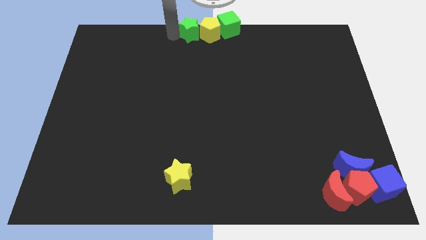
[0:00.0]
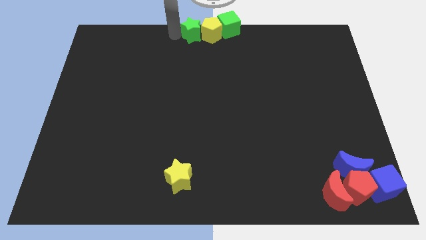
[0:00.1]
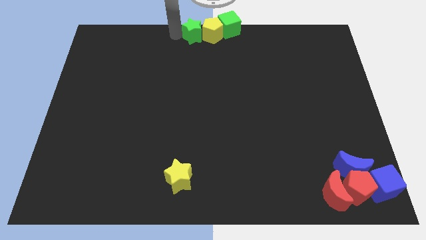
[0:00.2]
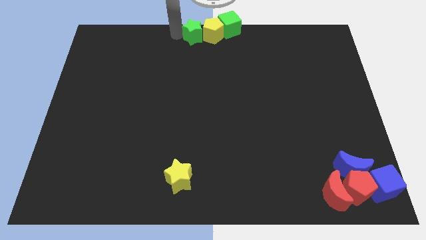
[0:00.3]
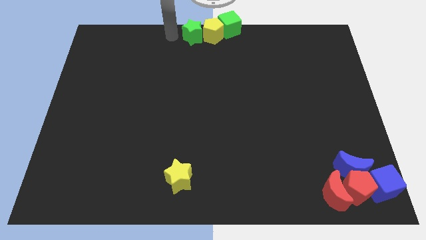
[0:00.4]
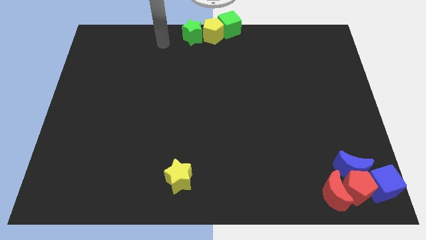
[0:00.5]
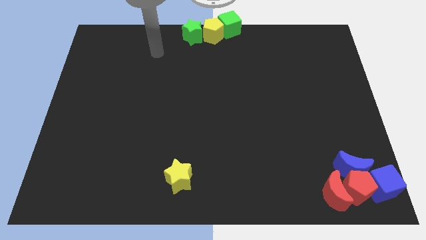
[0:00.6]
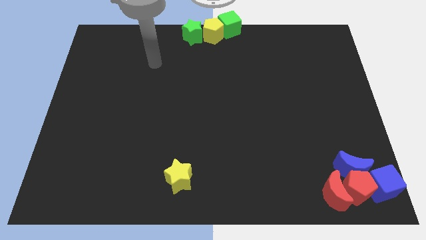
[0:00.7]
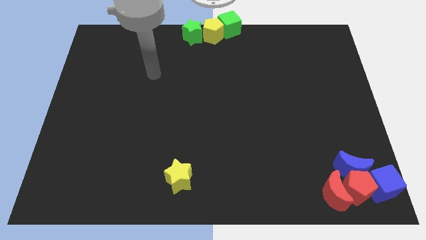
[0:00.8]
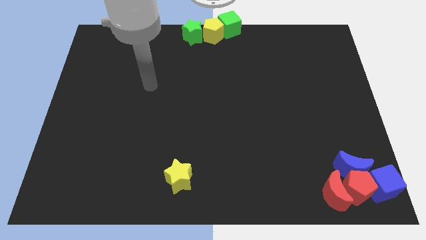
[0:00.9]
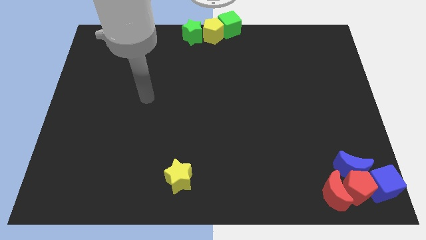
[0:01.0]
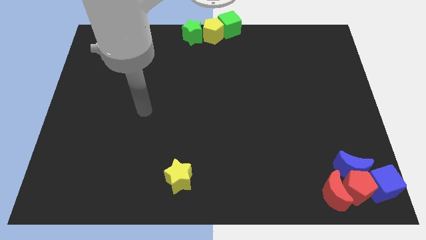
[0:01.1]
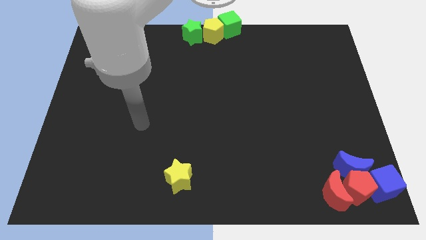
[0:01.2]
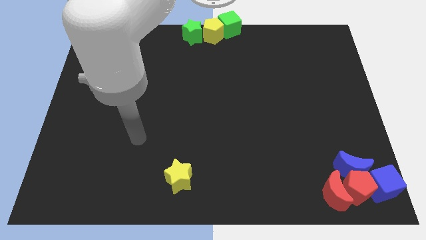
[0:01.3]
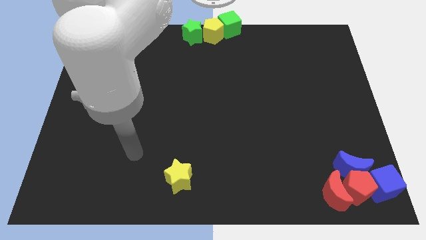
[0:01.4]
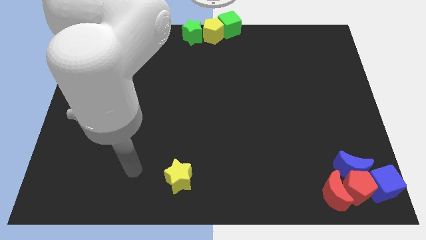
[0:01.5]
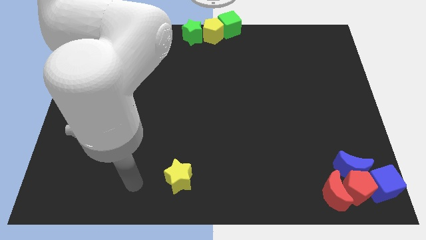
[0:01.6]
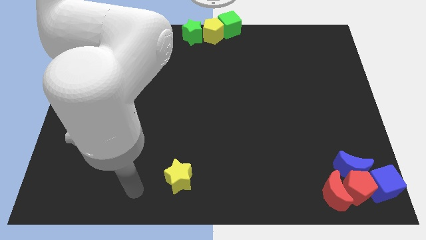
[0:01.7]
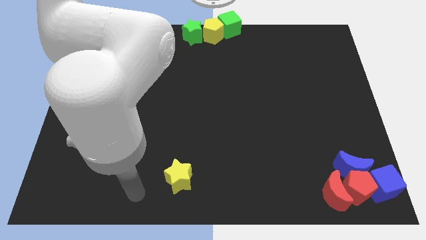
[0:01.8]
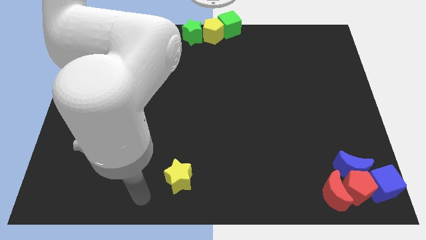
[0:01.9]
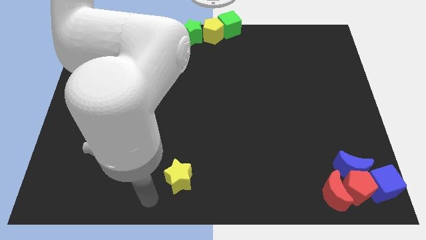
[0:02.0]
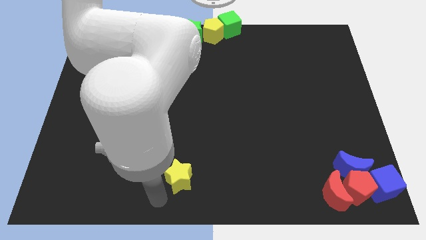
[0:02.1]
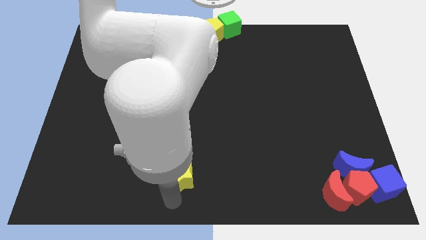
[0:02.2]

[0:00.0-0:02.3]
go near yellow star

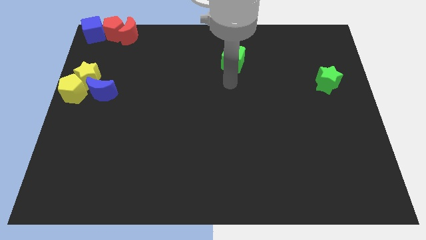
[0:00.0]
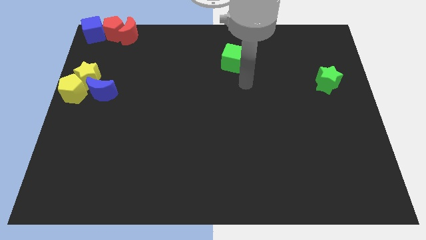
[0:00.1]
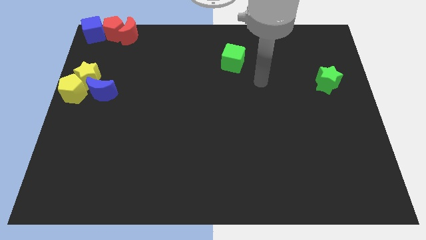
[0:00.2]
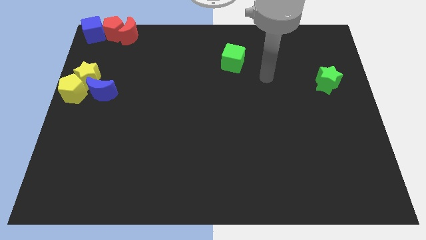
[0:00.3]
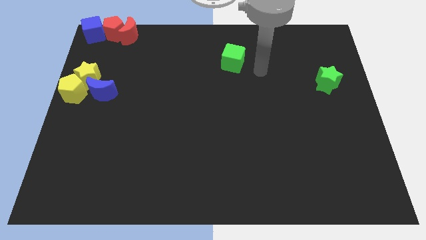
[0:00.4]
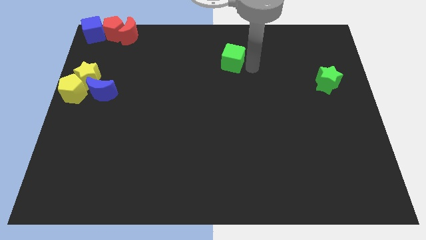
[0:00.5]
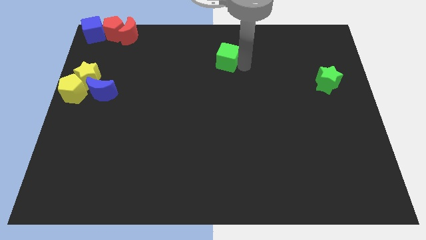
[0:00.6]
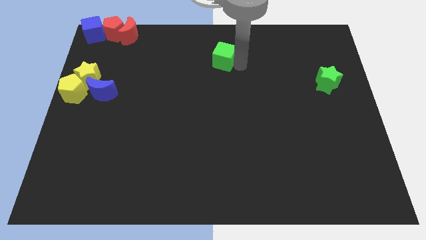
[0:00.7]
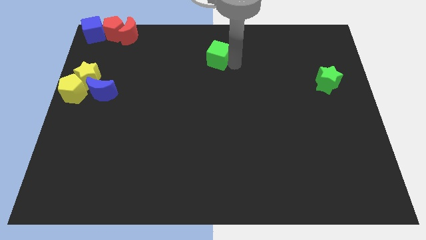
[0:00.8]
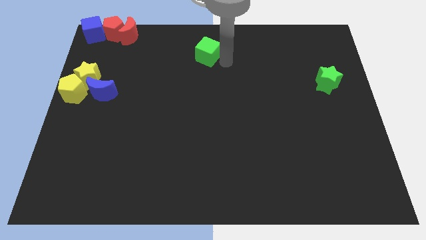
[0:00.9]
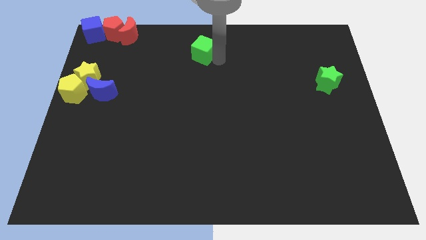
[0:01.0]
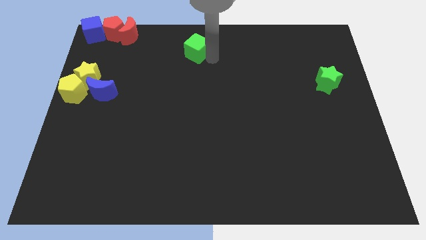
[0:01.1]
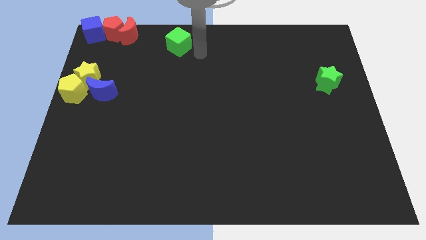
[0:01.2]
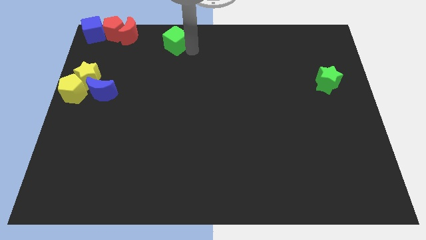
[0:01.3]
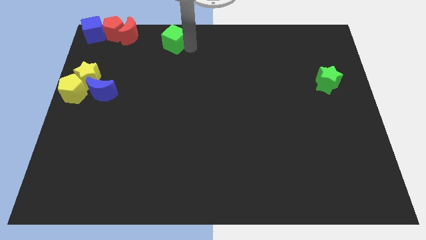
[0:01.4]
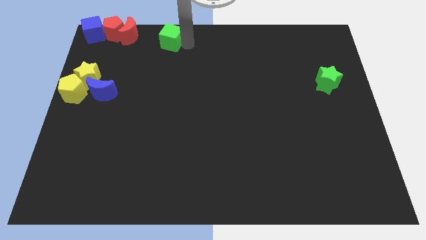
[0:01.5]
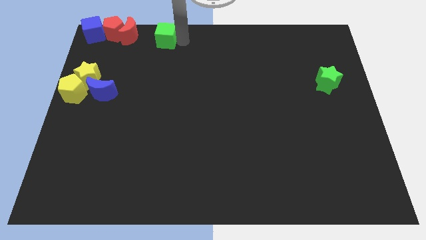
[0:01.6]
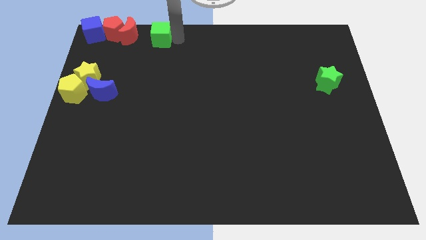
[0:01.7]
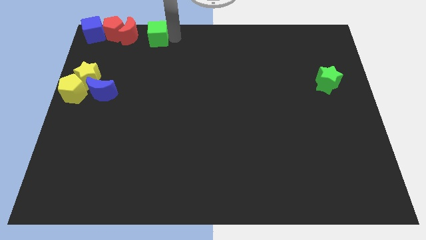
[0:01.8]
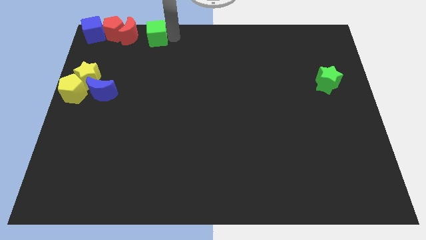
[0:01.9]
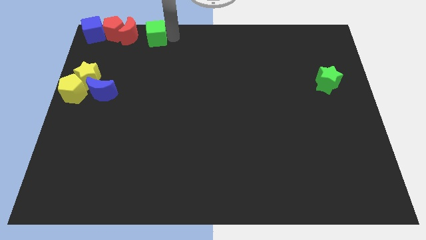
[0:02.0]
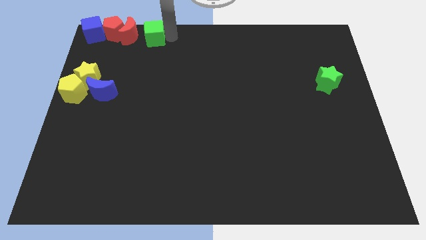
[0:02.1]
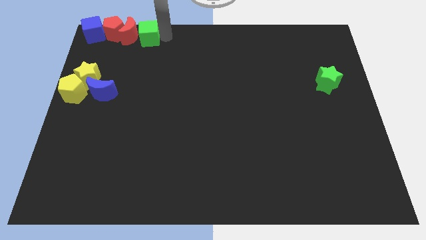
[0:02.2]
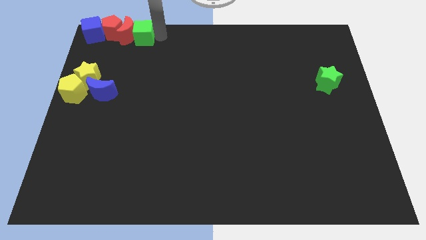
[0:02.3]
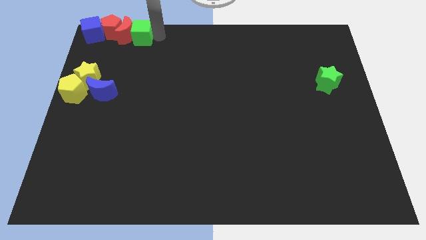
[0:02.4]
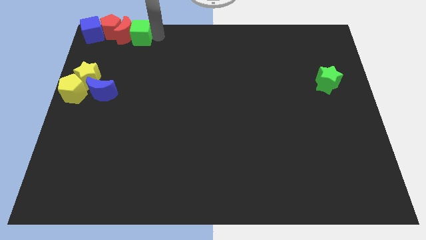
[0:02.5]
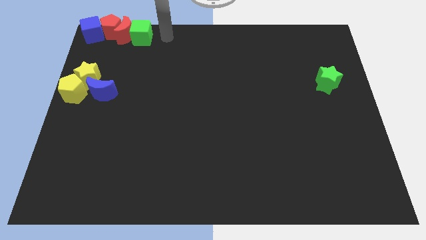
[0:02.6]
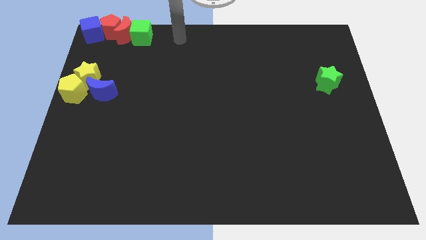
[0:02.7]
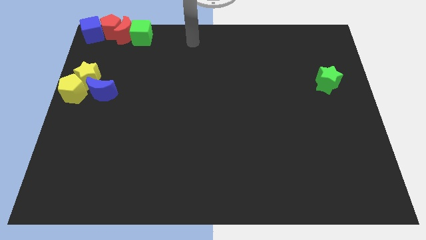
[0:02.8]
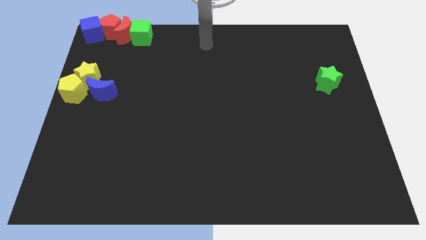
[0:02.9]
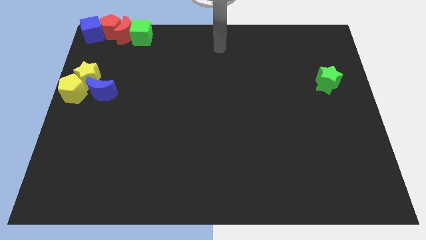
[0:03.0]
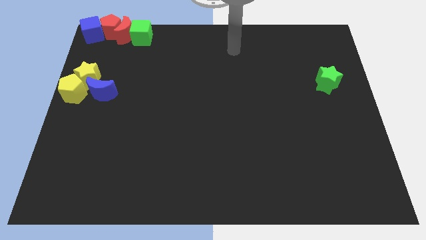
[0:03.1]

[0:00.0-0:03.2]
move the green cube into the red moon

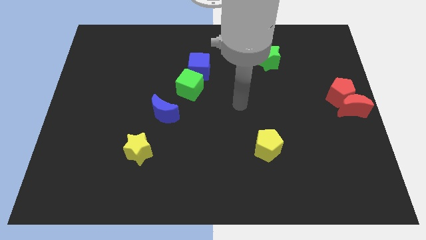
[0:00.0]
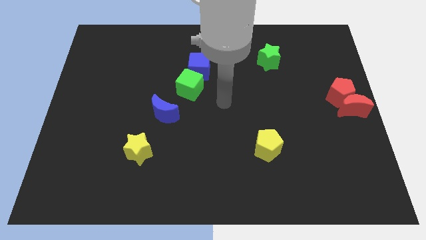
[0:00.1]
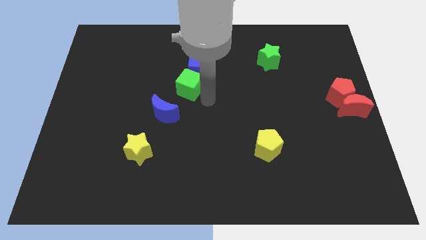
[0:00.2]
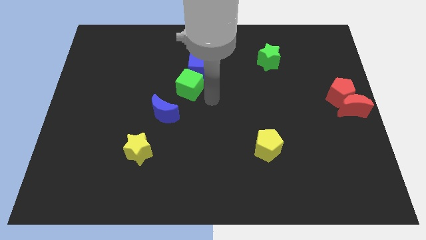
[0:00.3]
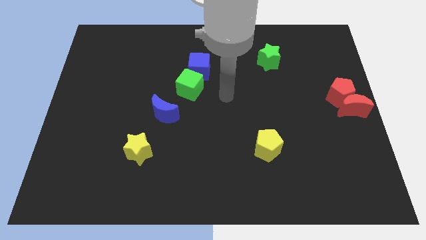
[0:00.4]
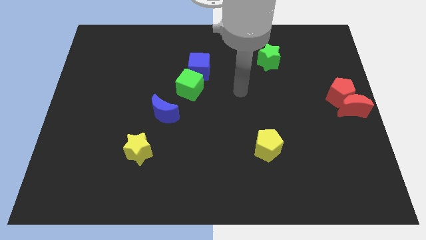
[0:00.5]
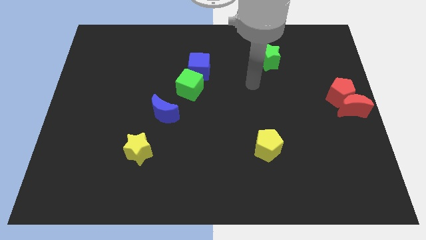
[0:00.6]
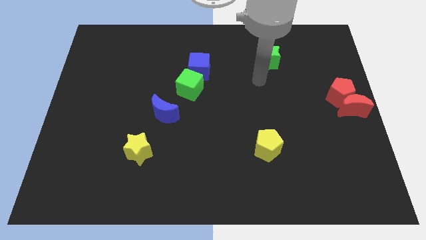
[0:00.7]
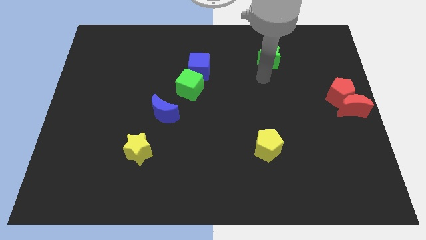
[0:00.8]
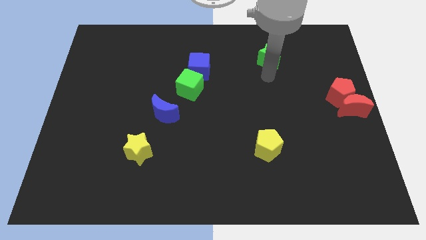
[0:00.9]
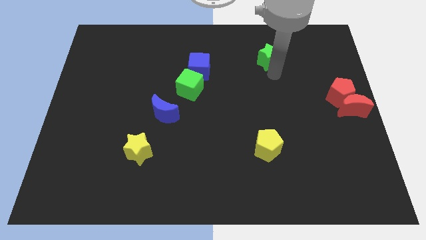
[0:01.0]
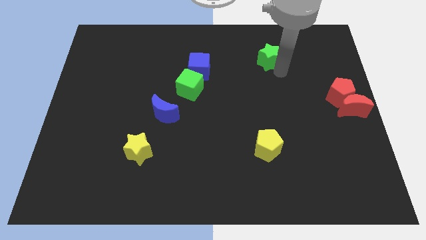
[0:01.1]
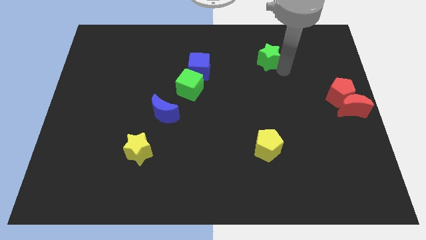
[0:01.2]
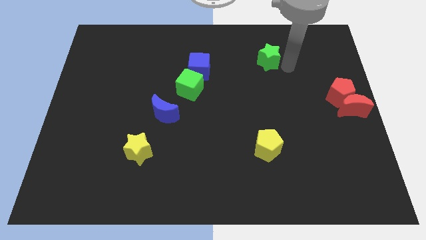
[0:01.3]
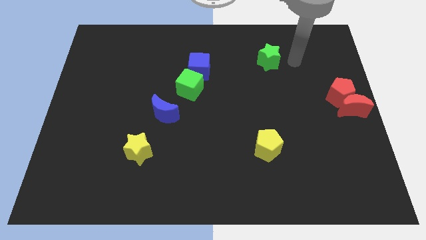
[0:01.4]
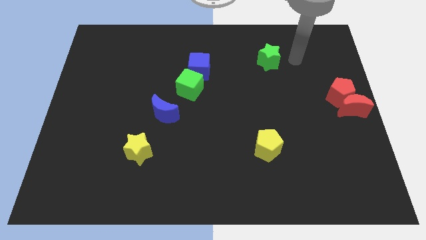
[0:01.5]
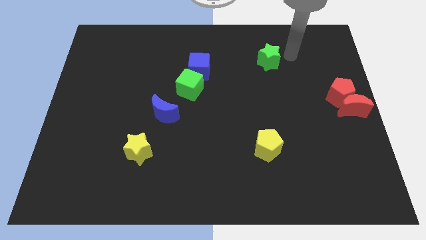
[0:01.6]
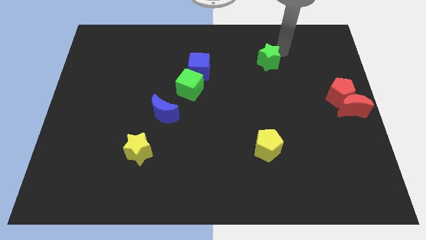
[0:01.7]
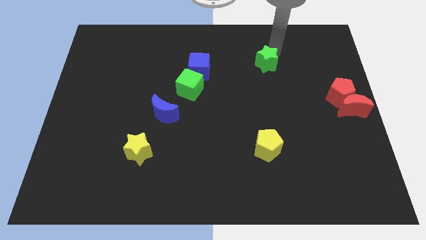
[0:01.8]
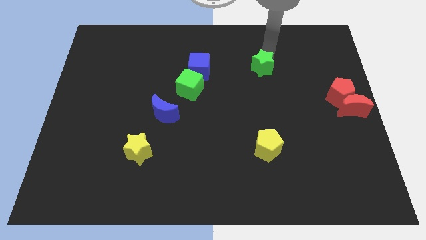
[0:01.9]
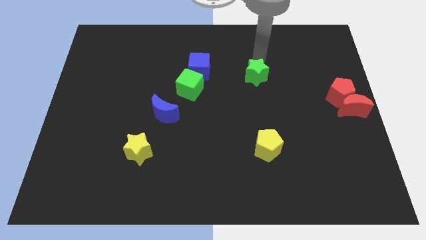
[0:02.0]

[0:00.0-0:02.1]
slightly move the green star towards the center of board

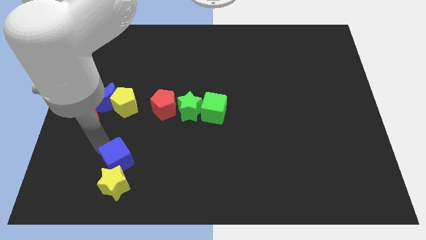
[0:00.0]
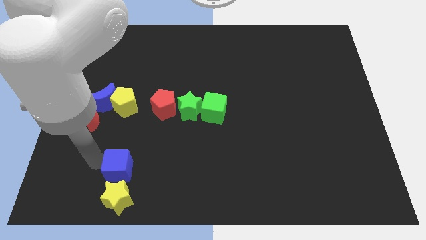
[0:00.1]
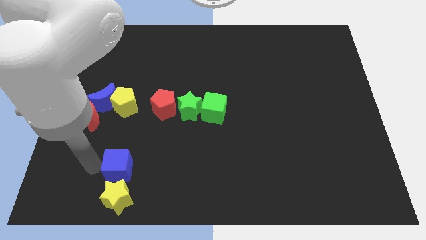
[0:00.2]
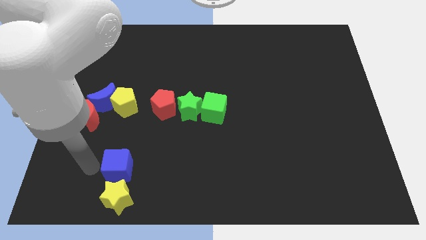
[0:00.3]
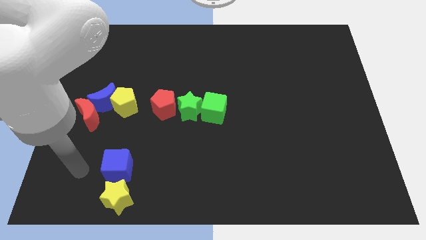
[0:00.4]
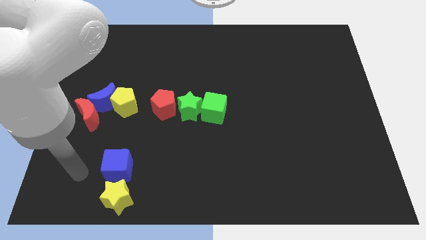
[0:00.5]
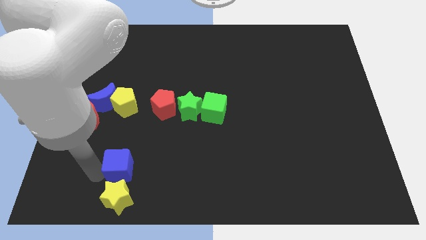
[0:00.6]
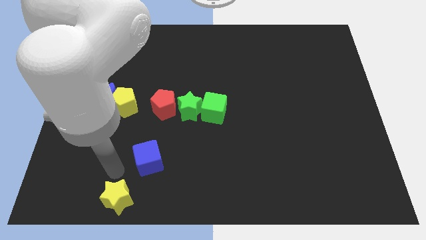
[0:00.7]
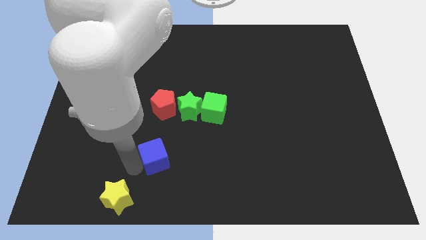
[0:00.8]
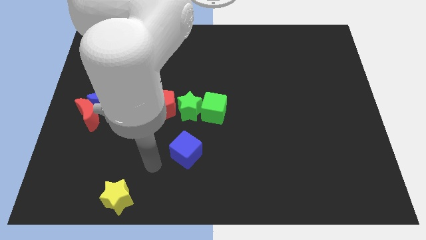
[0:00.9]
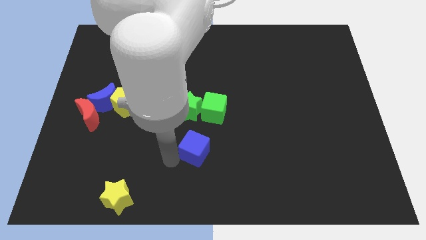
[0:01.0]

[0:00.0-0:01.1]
place the blue cube down to the green star

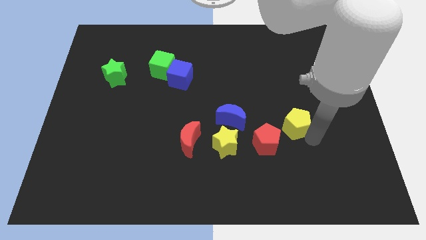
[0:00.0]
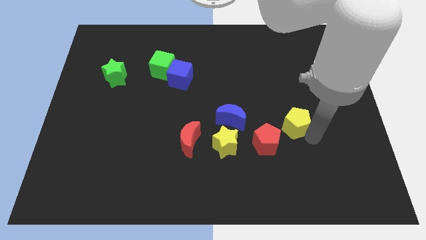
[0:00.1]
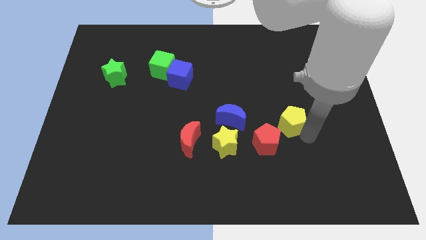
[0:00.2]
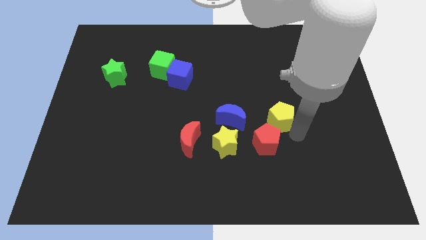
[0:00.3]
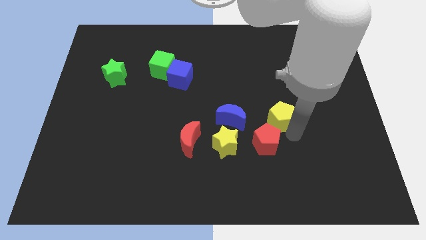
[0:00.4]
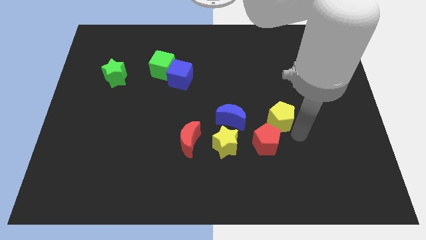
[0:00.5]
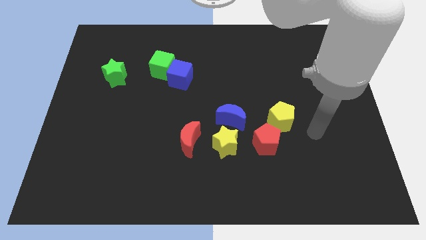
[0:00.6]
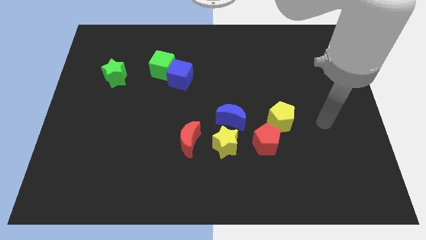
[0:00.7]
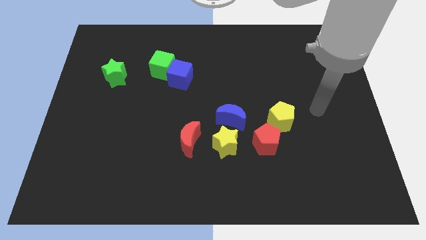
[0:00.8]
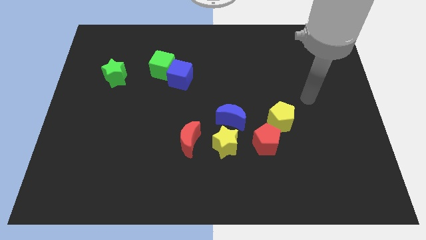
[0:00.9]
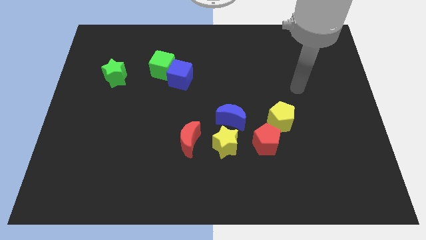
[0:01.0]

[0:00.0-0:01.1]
push yellow pentagon to the top right of red pentagon
